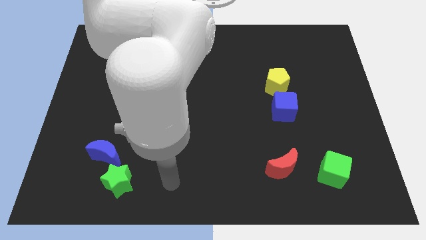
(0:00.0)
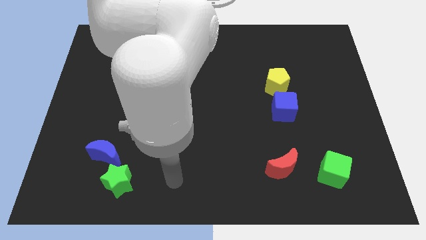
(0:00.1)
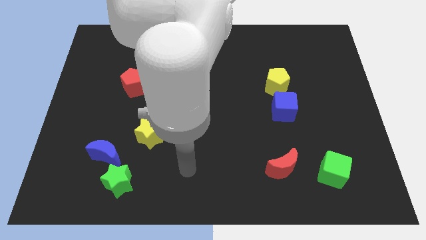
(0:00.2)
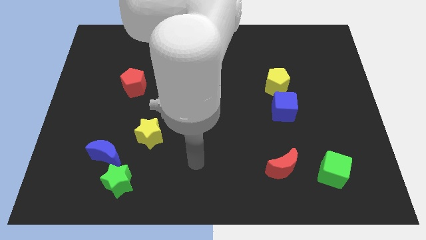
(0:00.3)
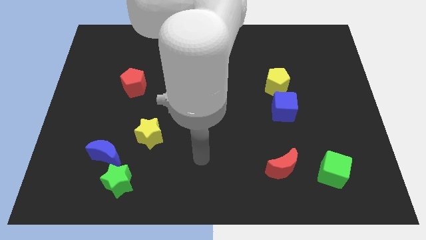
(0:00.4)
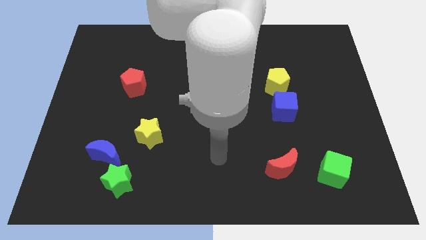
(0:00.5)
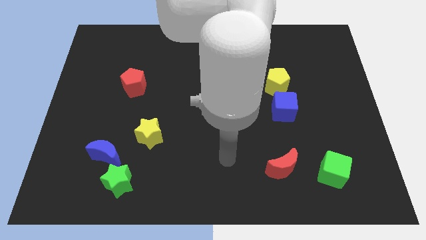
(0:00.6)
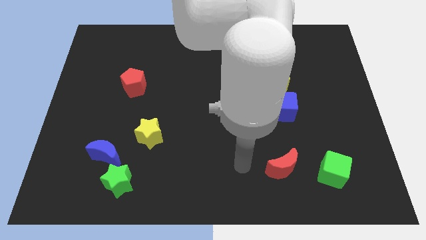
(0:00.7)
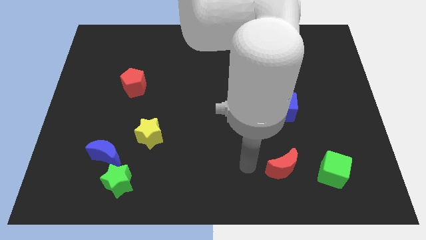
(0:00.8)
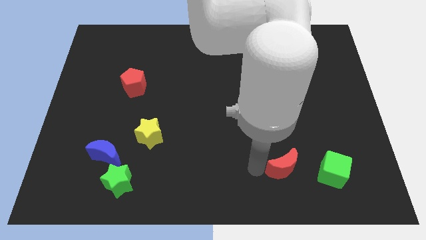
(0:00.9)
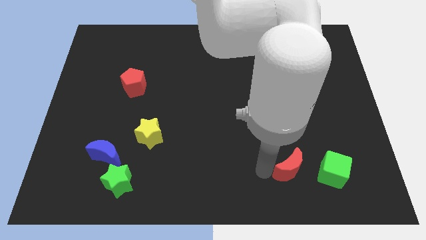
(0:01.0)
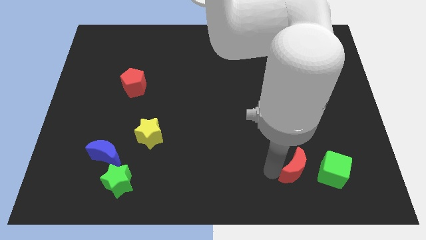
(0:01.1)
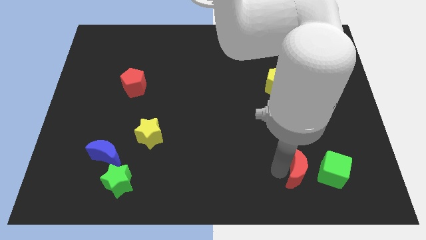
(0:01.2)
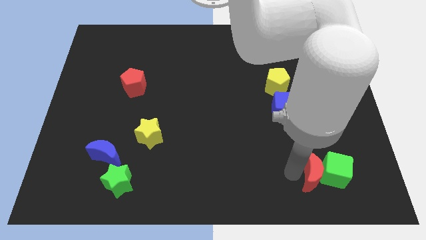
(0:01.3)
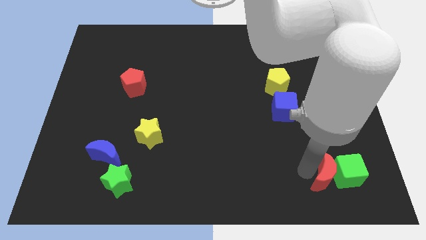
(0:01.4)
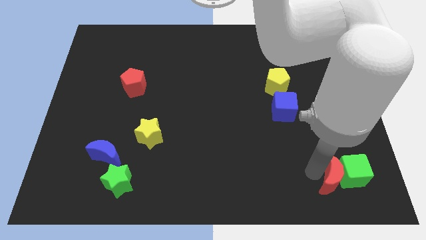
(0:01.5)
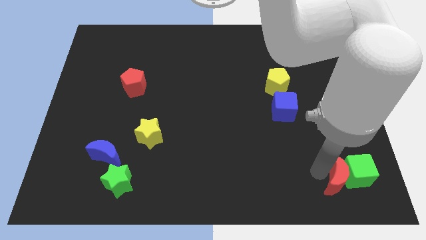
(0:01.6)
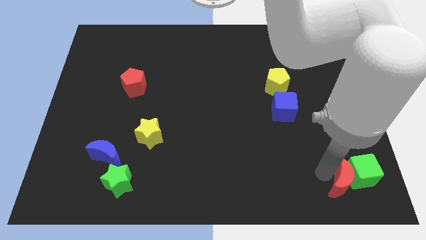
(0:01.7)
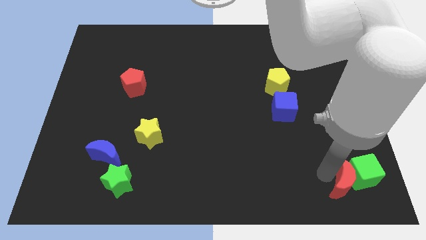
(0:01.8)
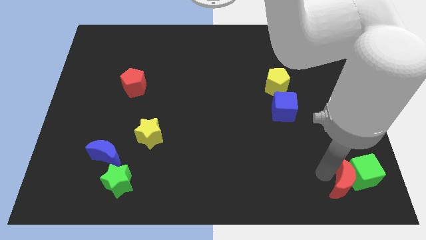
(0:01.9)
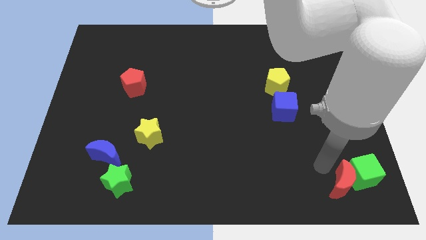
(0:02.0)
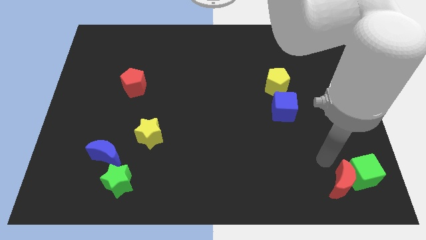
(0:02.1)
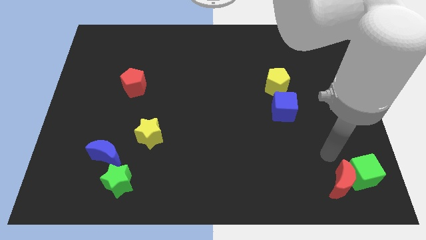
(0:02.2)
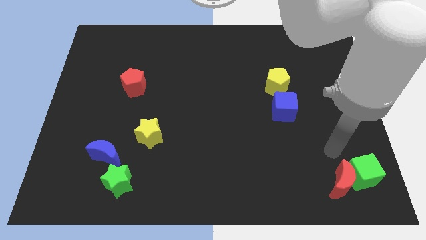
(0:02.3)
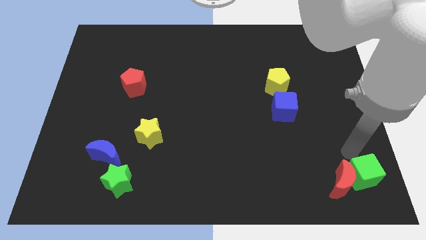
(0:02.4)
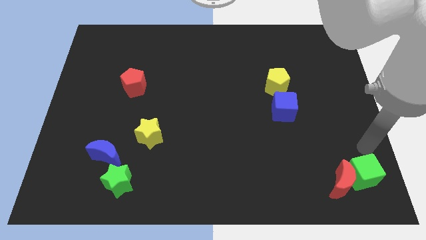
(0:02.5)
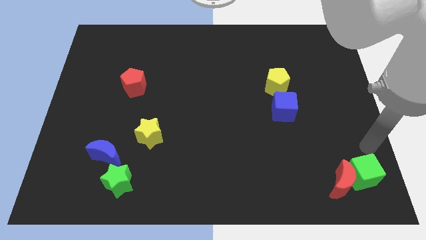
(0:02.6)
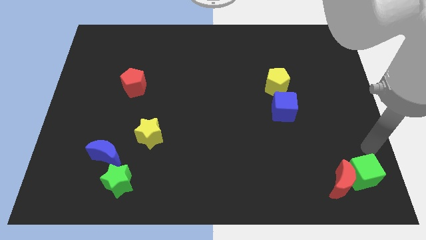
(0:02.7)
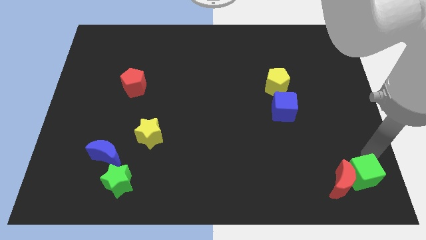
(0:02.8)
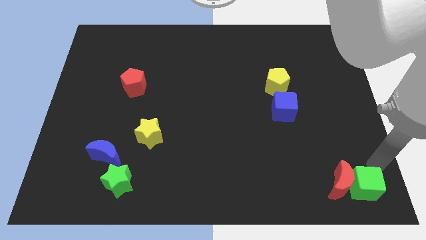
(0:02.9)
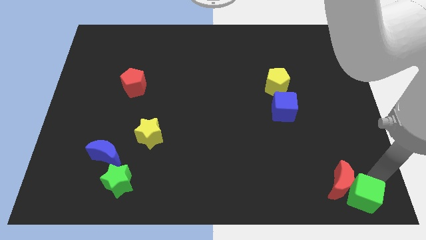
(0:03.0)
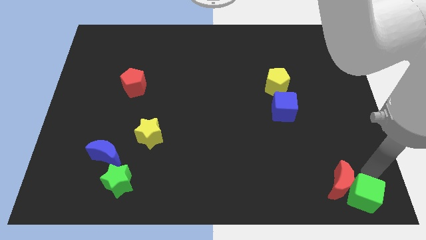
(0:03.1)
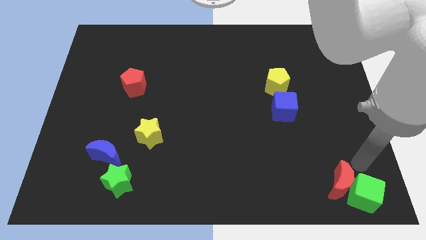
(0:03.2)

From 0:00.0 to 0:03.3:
move the red moon along with green cube towards the bottom right of the board

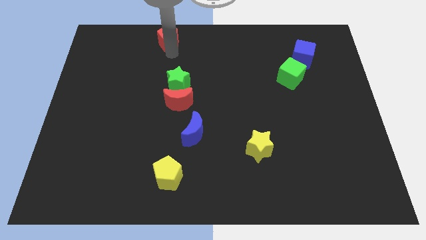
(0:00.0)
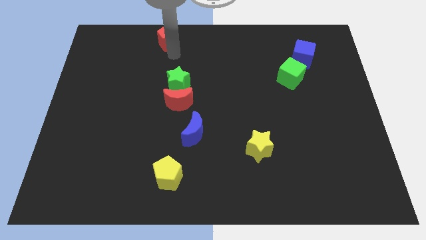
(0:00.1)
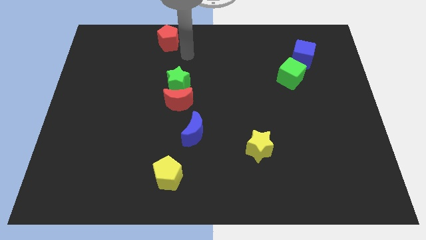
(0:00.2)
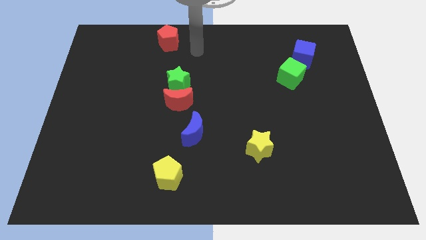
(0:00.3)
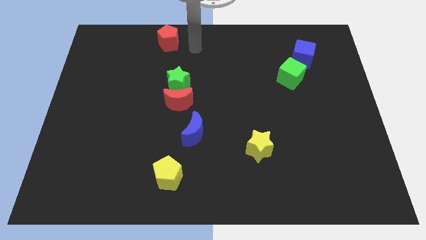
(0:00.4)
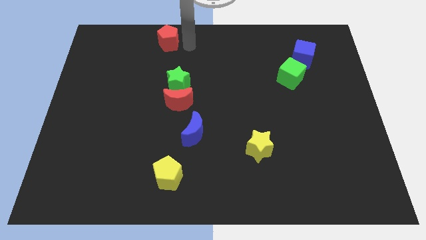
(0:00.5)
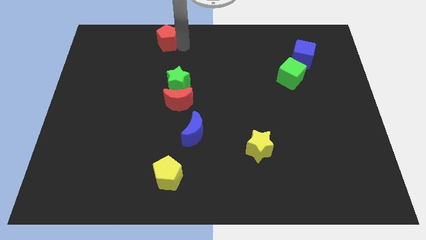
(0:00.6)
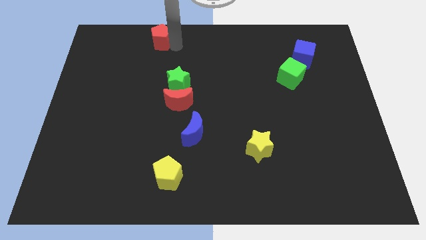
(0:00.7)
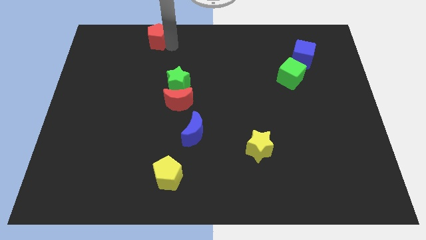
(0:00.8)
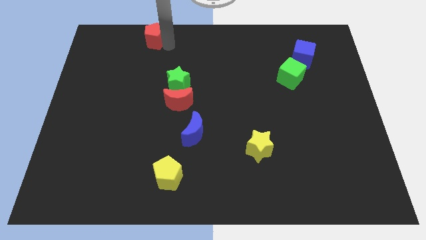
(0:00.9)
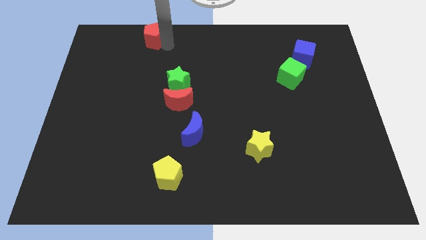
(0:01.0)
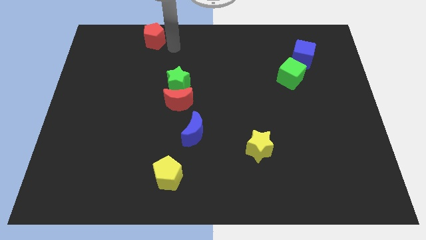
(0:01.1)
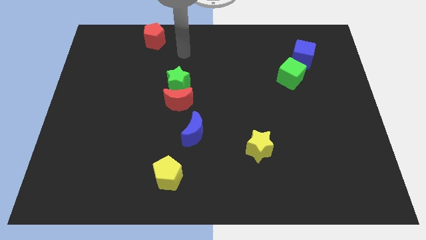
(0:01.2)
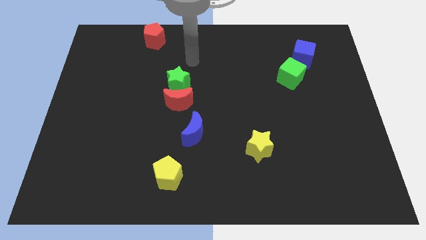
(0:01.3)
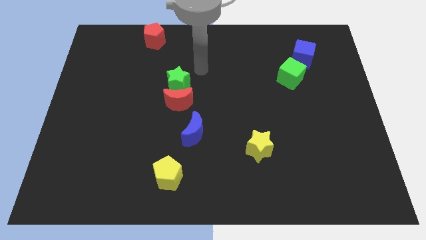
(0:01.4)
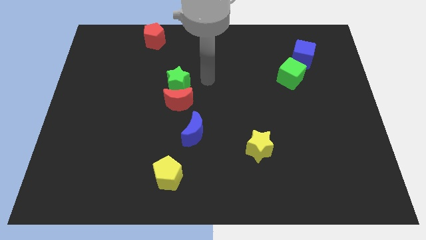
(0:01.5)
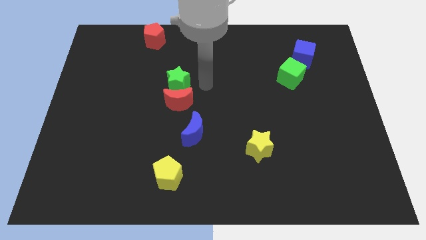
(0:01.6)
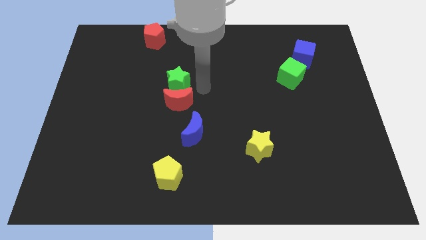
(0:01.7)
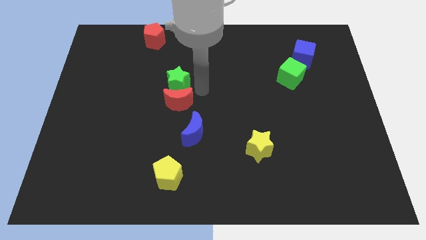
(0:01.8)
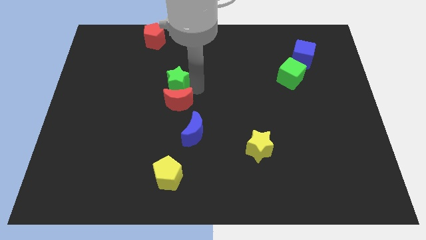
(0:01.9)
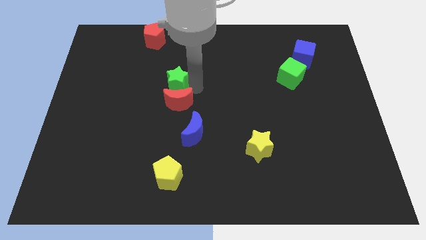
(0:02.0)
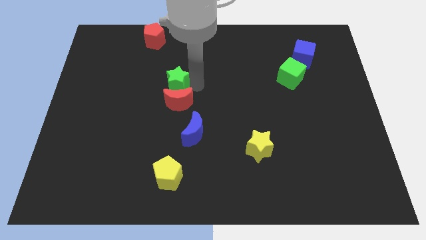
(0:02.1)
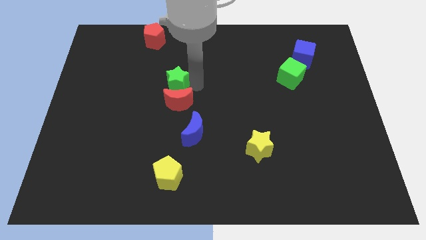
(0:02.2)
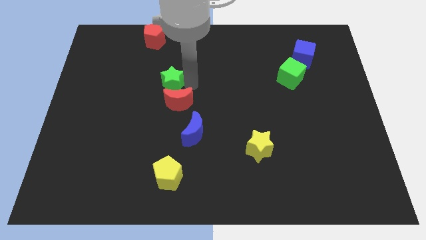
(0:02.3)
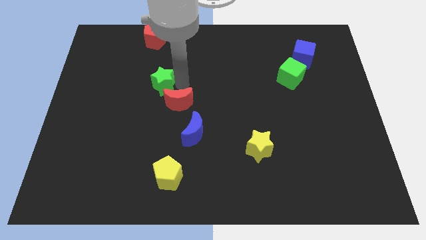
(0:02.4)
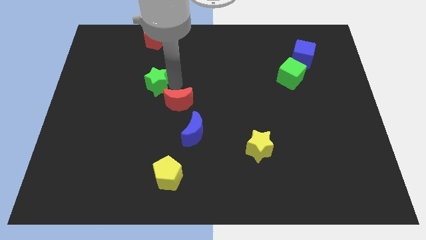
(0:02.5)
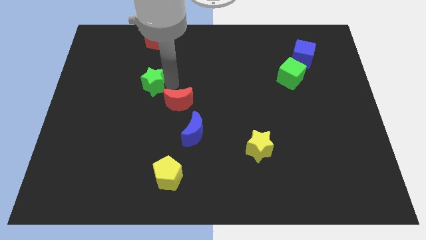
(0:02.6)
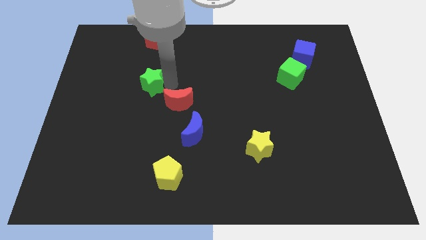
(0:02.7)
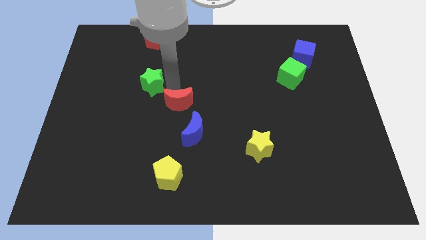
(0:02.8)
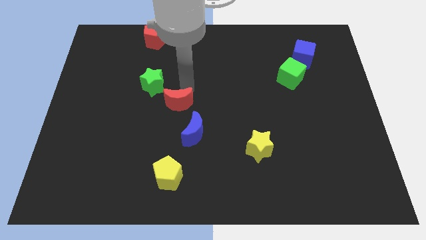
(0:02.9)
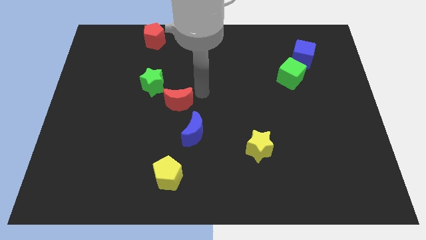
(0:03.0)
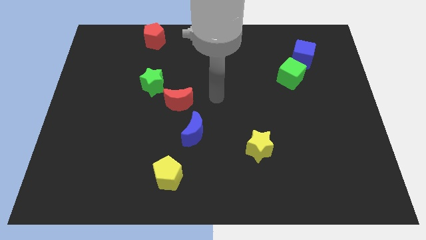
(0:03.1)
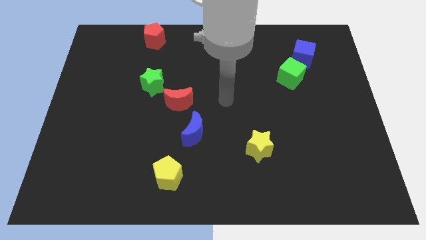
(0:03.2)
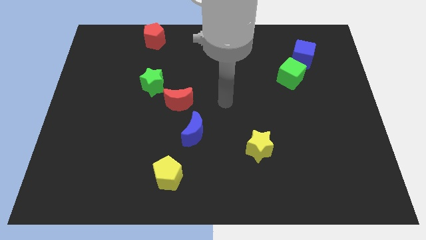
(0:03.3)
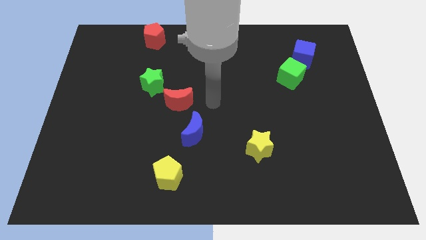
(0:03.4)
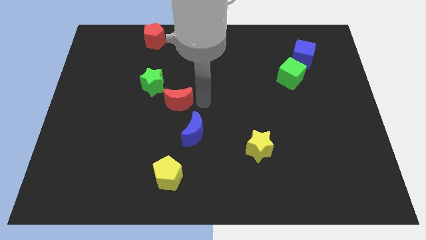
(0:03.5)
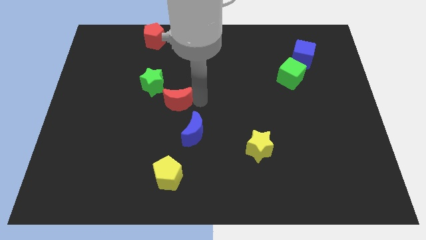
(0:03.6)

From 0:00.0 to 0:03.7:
place the red pentagon and green star in a vertical line

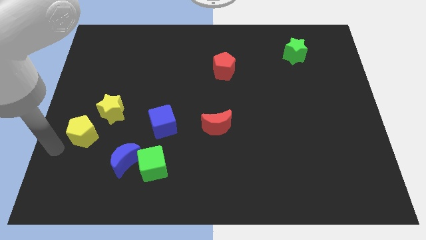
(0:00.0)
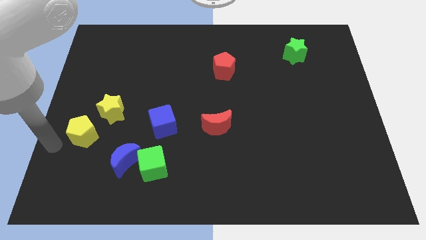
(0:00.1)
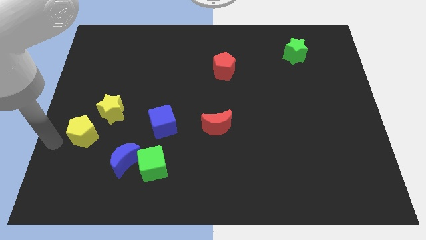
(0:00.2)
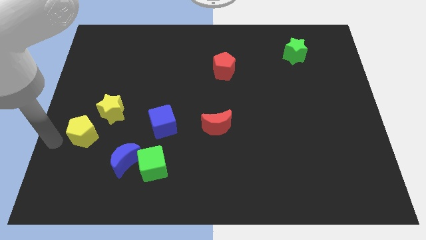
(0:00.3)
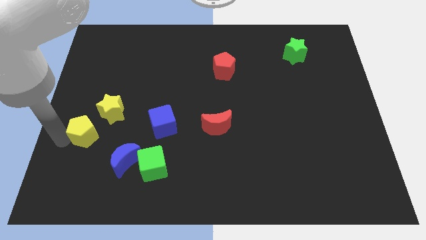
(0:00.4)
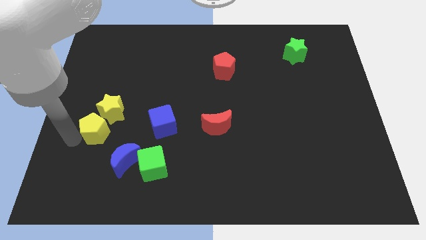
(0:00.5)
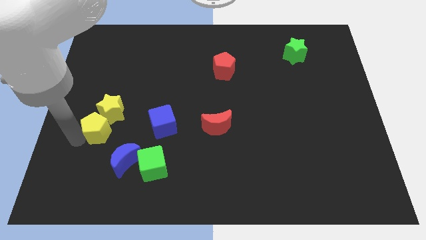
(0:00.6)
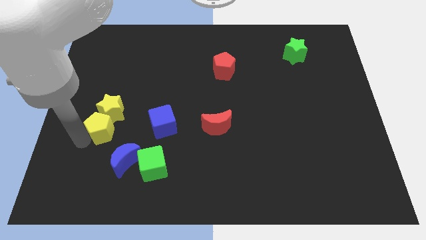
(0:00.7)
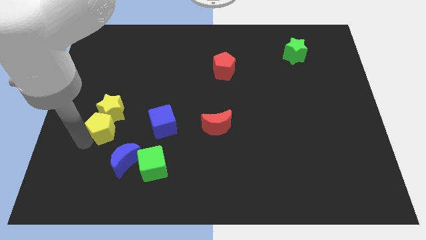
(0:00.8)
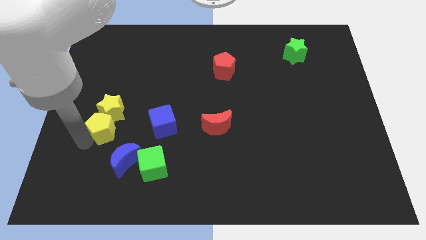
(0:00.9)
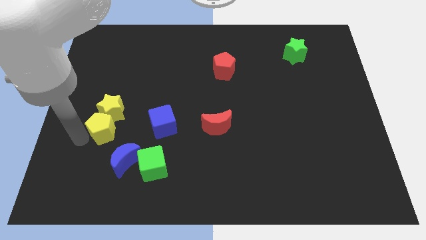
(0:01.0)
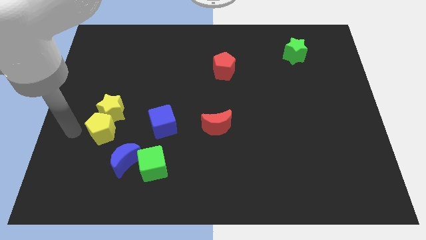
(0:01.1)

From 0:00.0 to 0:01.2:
place yellow pentagon at the bottom of yellow star

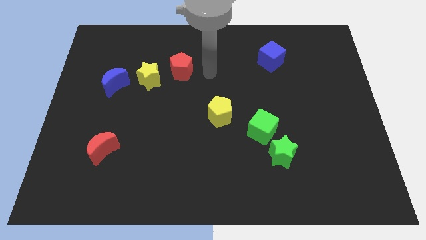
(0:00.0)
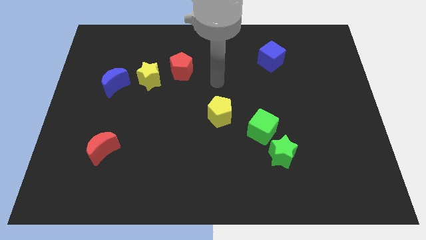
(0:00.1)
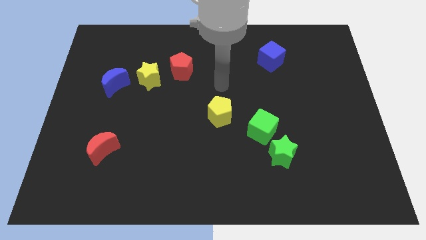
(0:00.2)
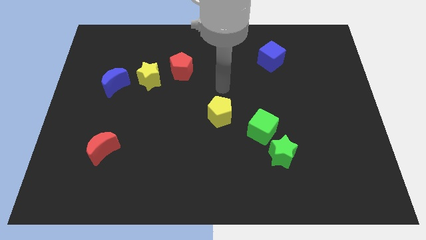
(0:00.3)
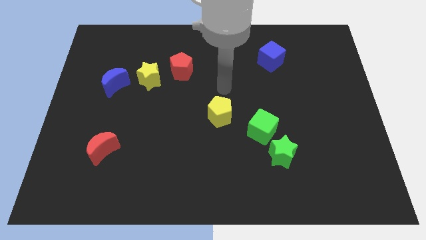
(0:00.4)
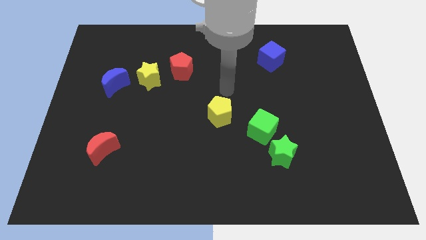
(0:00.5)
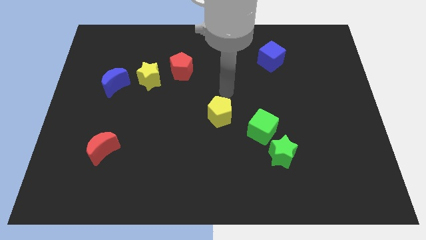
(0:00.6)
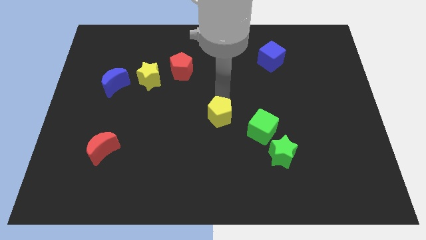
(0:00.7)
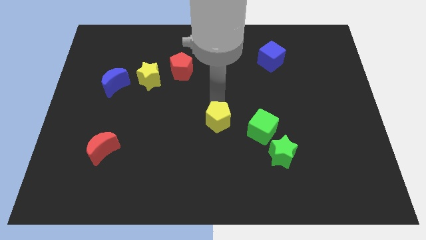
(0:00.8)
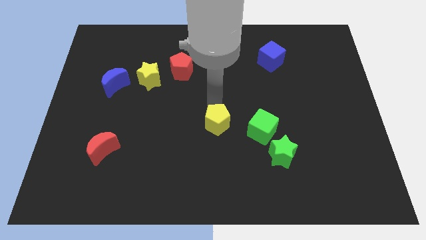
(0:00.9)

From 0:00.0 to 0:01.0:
push the yellow pentagon slightly downwards
